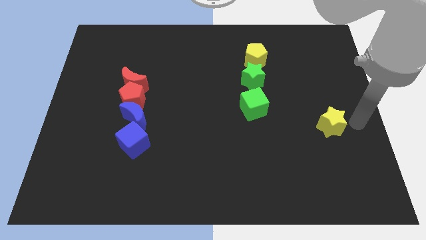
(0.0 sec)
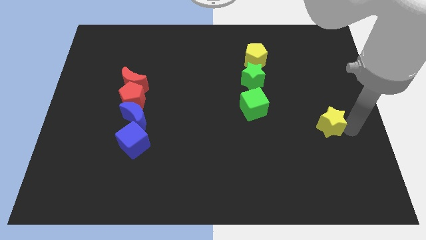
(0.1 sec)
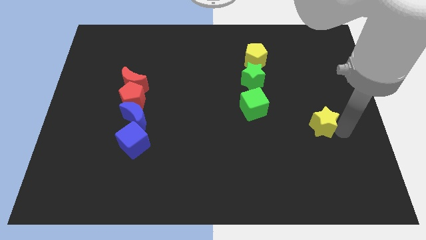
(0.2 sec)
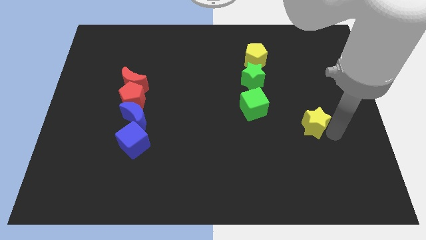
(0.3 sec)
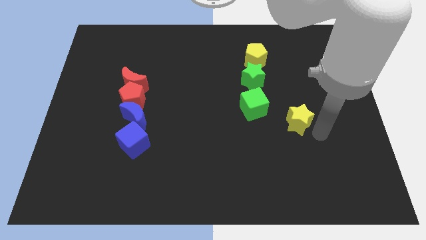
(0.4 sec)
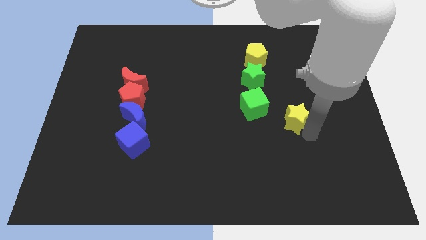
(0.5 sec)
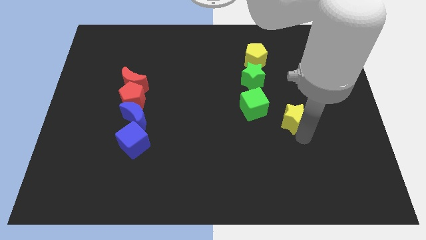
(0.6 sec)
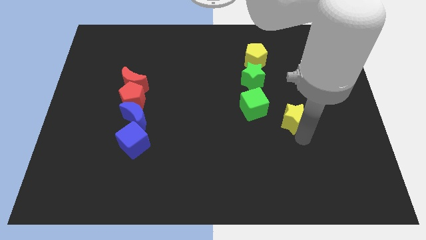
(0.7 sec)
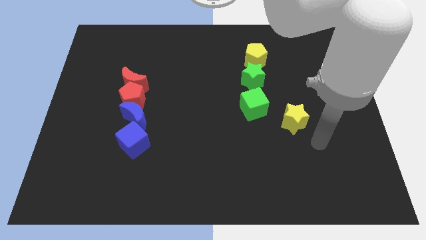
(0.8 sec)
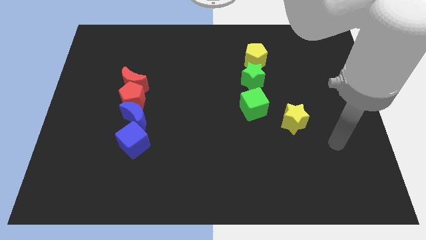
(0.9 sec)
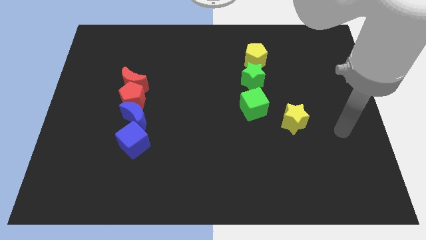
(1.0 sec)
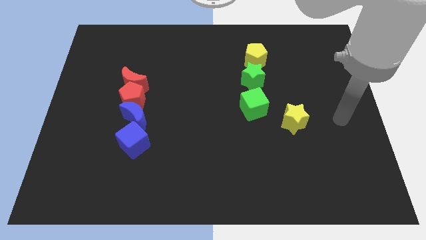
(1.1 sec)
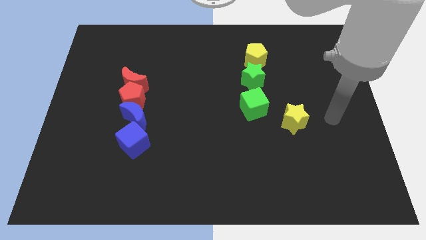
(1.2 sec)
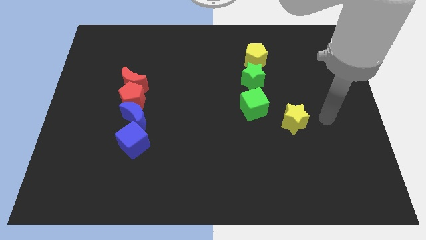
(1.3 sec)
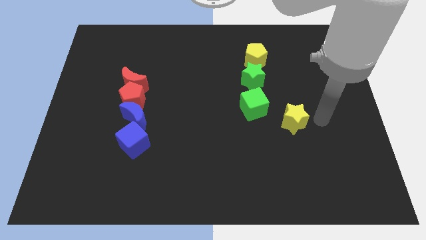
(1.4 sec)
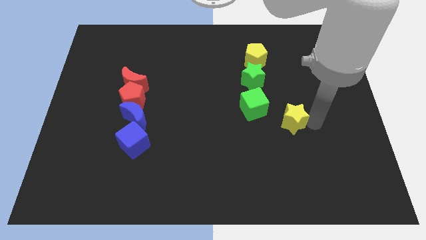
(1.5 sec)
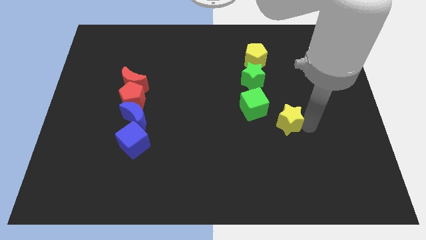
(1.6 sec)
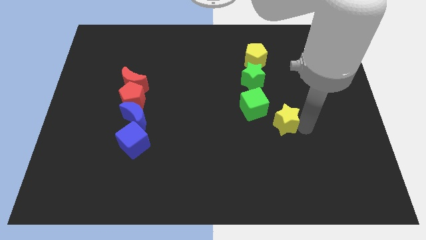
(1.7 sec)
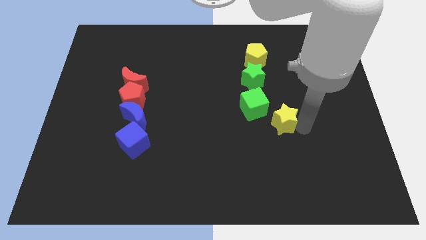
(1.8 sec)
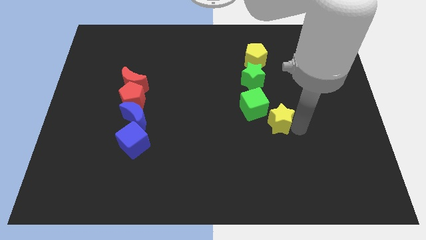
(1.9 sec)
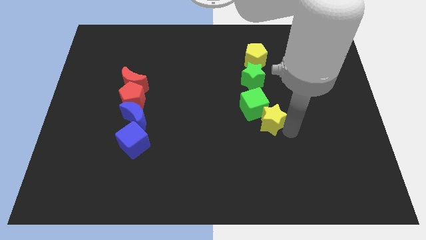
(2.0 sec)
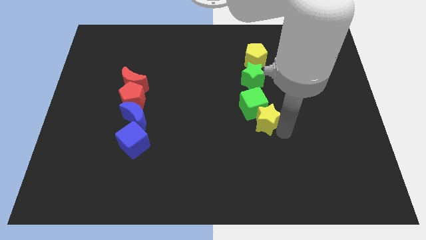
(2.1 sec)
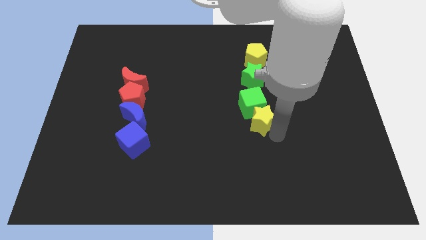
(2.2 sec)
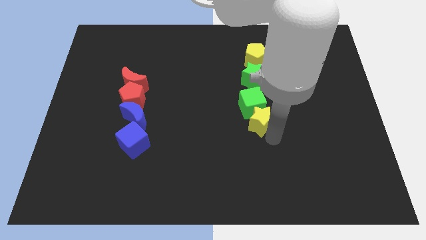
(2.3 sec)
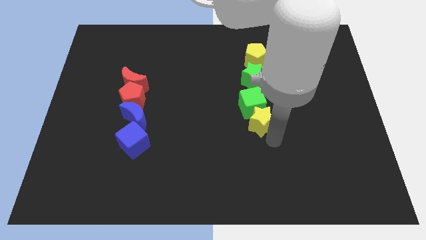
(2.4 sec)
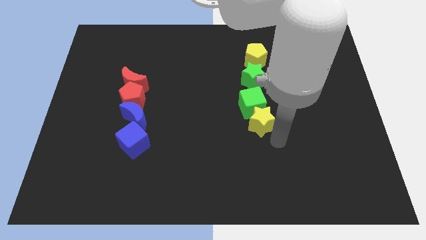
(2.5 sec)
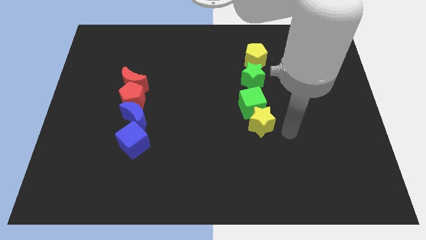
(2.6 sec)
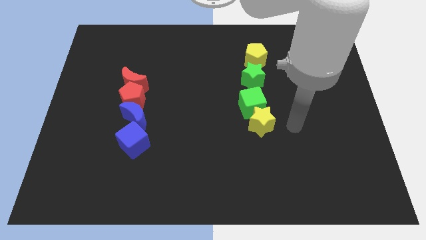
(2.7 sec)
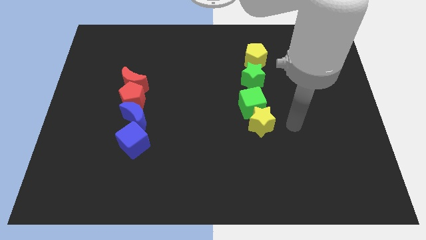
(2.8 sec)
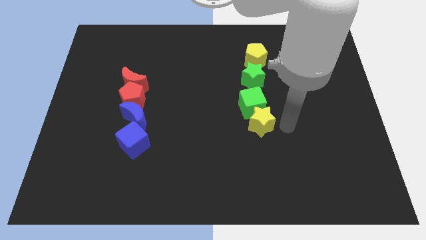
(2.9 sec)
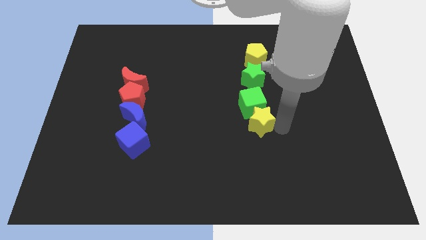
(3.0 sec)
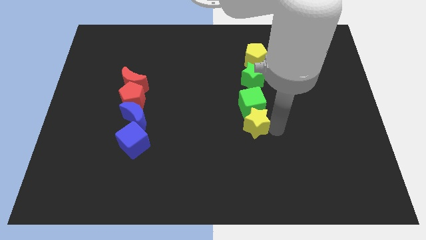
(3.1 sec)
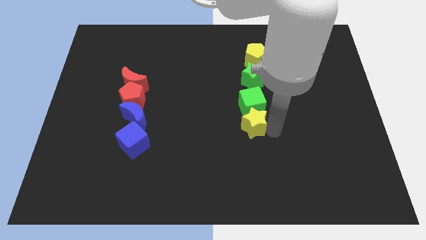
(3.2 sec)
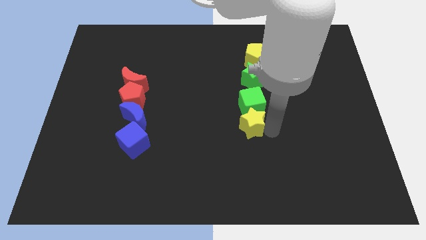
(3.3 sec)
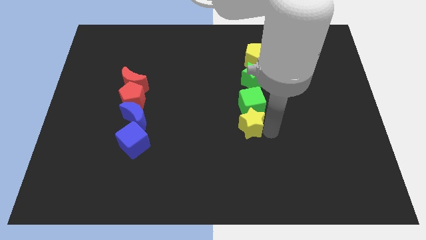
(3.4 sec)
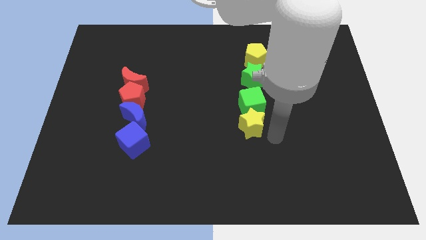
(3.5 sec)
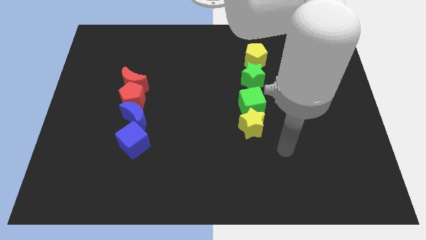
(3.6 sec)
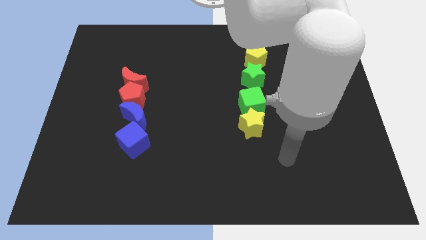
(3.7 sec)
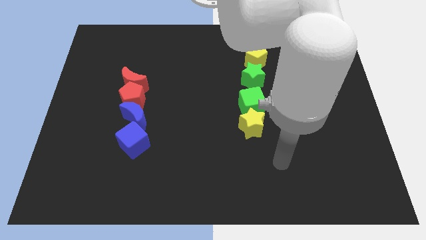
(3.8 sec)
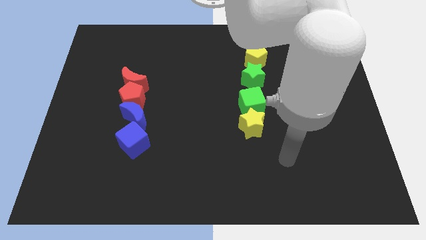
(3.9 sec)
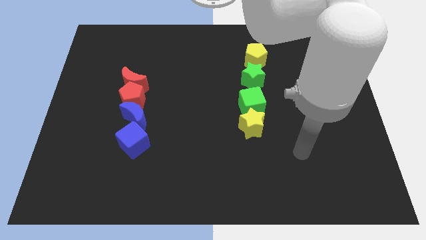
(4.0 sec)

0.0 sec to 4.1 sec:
move the yellow star below the green cube

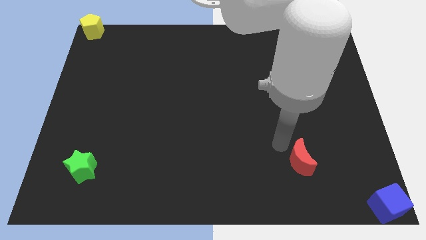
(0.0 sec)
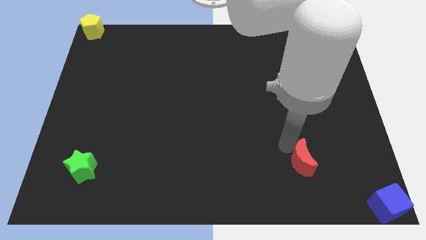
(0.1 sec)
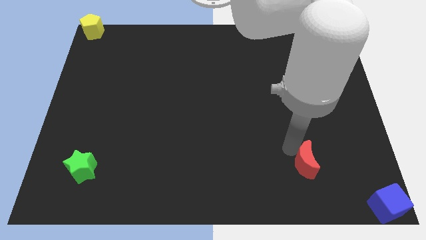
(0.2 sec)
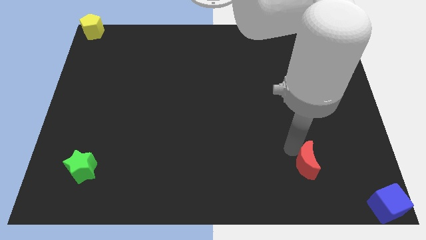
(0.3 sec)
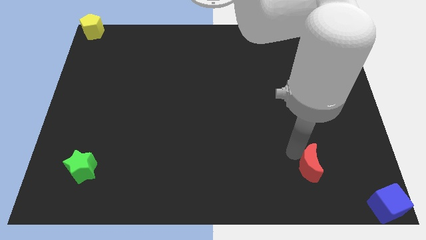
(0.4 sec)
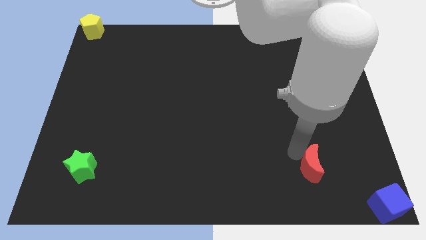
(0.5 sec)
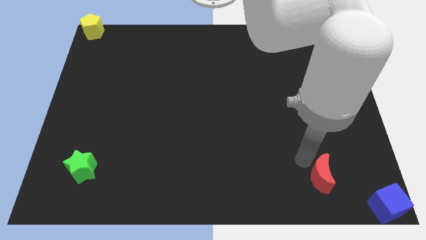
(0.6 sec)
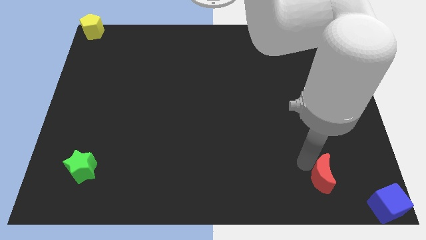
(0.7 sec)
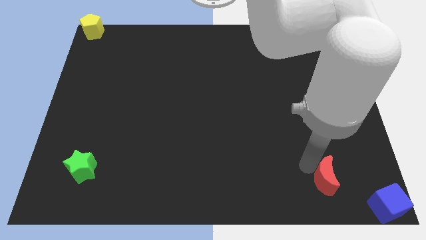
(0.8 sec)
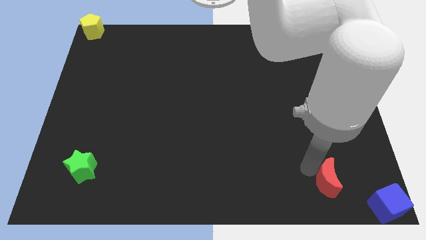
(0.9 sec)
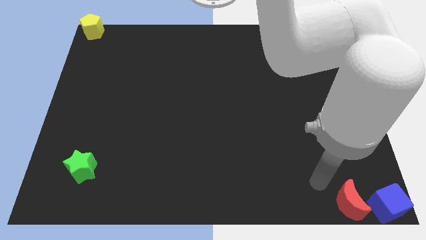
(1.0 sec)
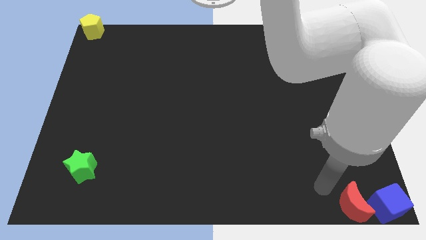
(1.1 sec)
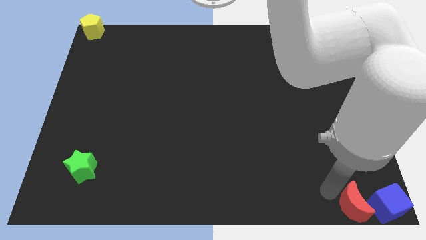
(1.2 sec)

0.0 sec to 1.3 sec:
move the red crescent towards the left side of the blue cube

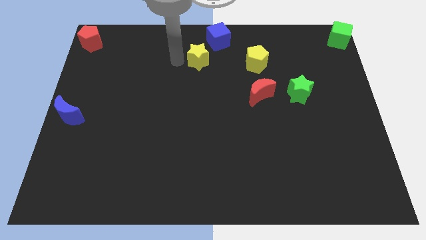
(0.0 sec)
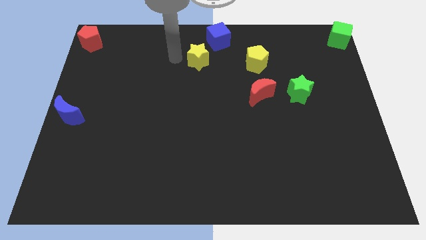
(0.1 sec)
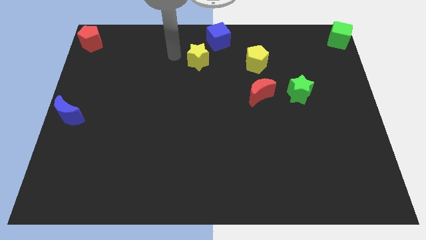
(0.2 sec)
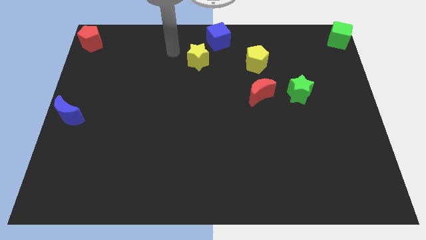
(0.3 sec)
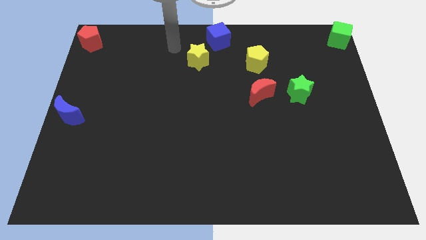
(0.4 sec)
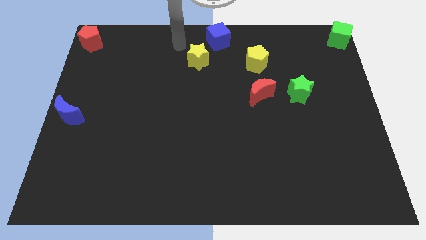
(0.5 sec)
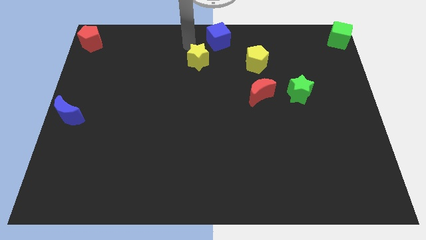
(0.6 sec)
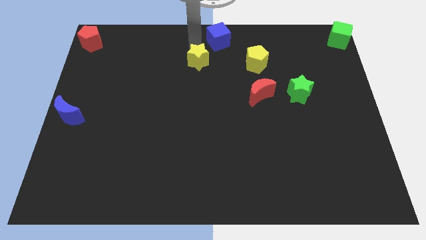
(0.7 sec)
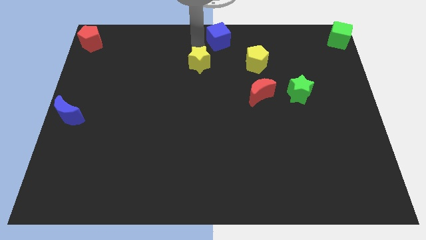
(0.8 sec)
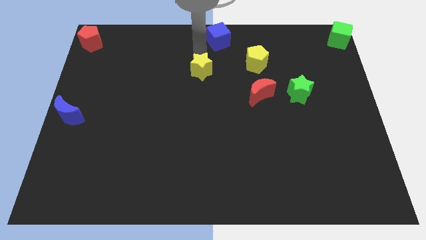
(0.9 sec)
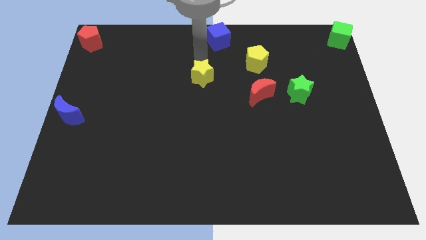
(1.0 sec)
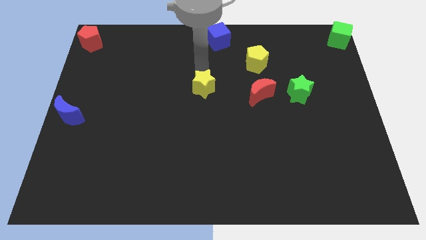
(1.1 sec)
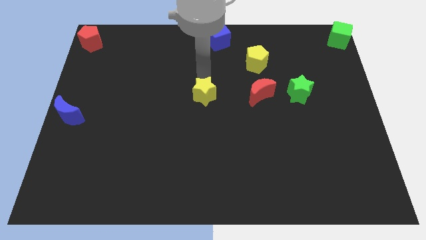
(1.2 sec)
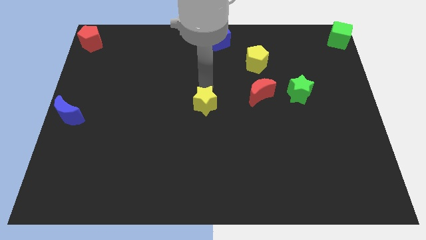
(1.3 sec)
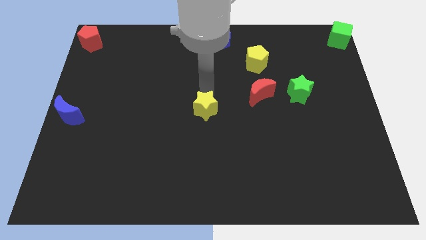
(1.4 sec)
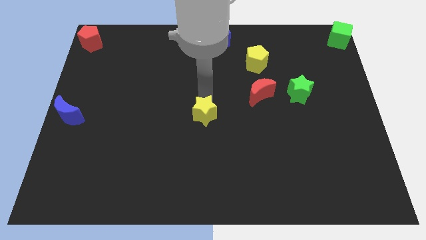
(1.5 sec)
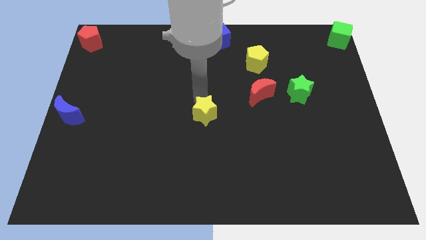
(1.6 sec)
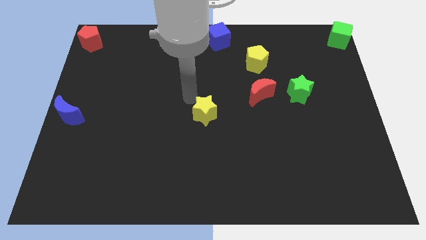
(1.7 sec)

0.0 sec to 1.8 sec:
move yellow star to the center of the board

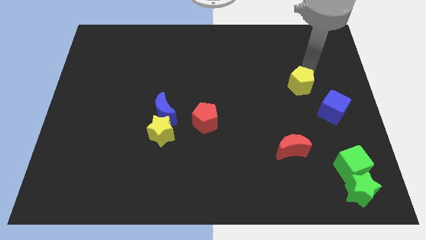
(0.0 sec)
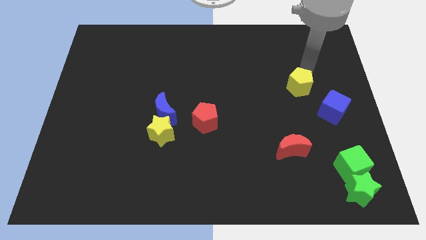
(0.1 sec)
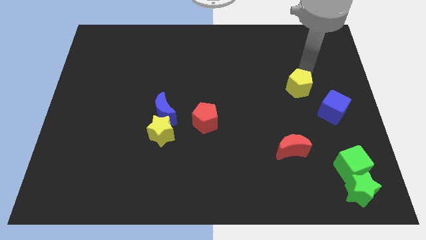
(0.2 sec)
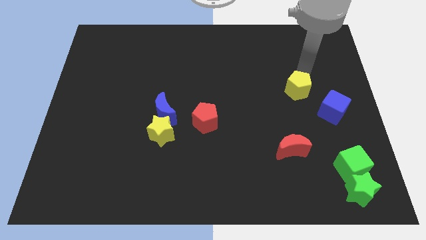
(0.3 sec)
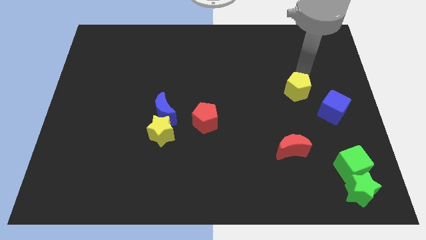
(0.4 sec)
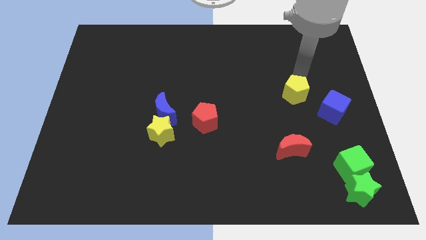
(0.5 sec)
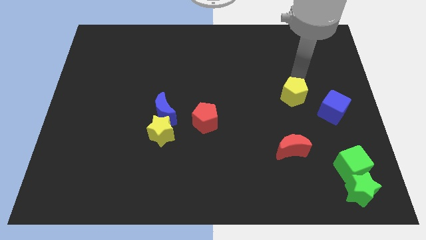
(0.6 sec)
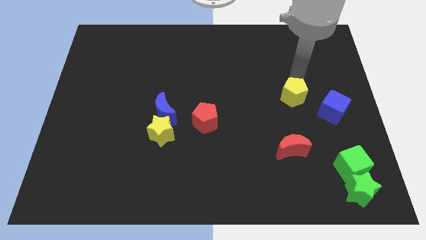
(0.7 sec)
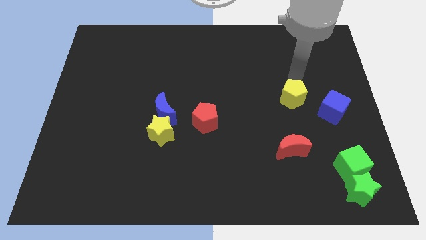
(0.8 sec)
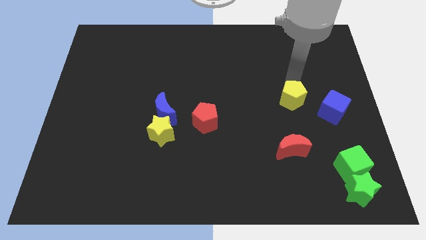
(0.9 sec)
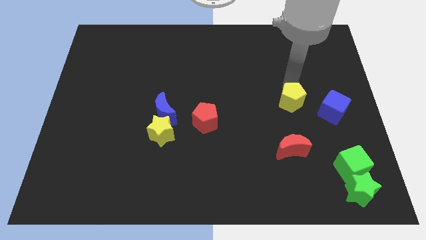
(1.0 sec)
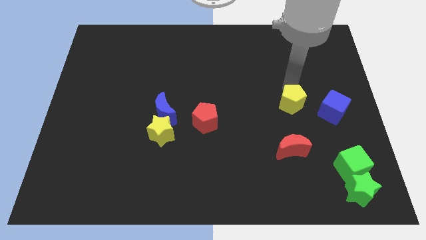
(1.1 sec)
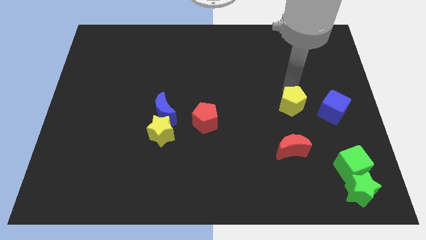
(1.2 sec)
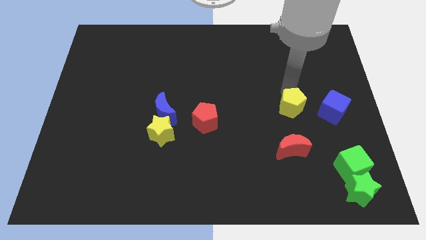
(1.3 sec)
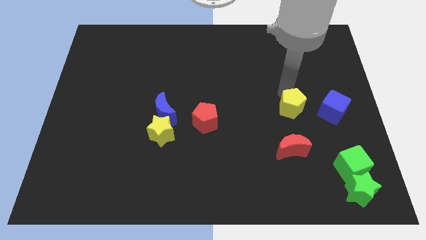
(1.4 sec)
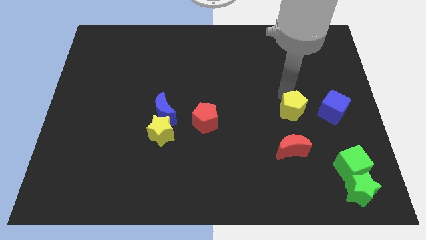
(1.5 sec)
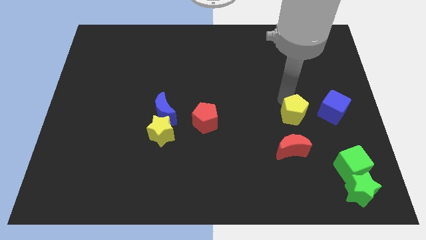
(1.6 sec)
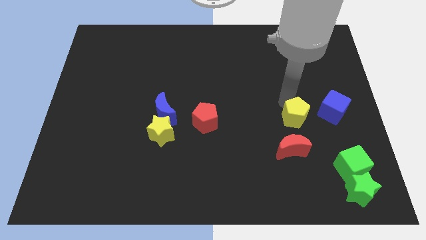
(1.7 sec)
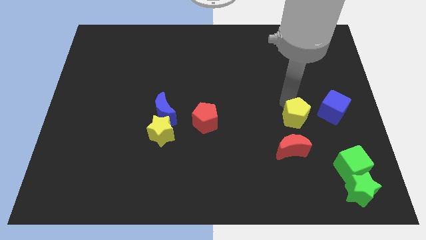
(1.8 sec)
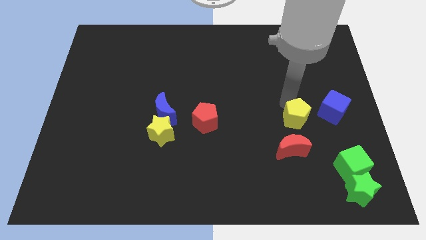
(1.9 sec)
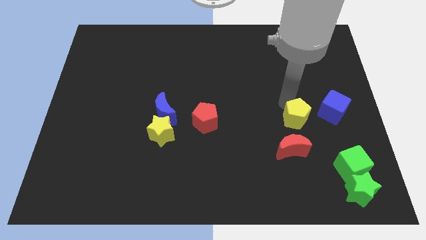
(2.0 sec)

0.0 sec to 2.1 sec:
push yellow pentagon on top of red moon
